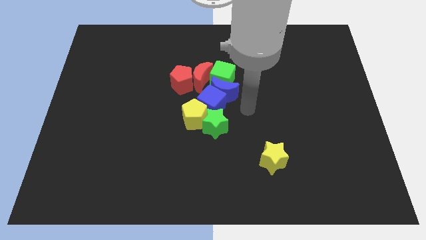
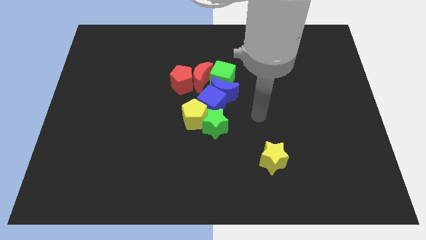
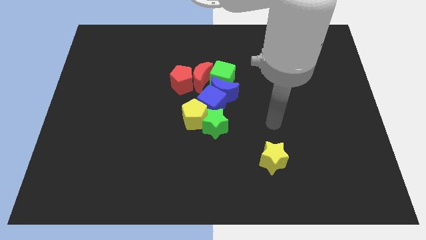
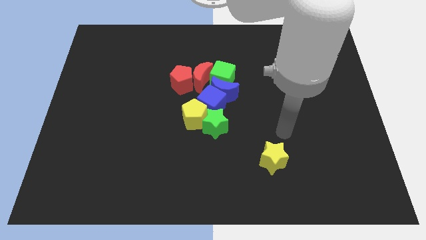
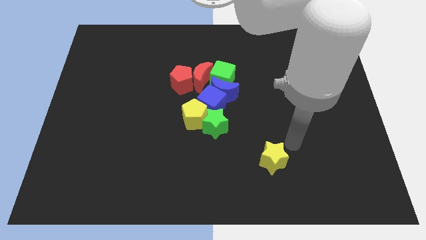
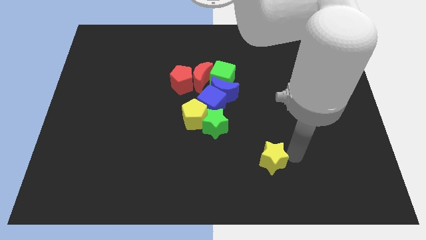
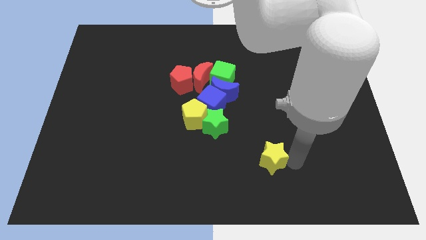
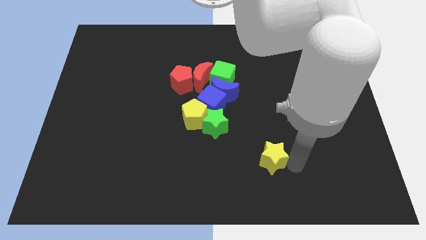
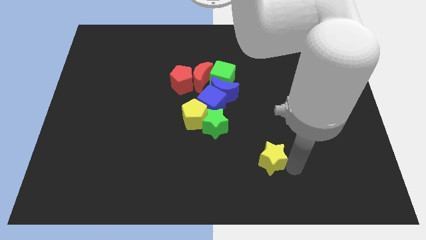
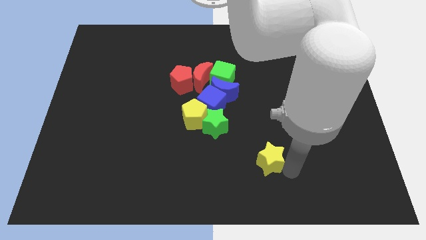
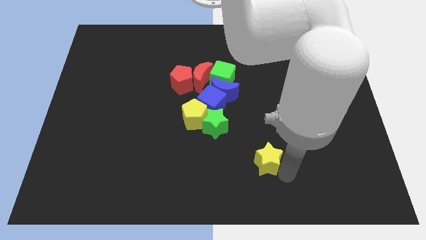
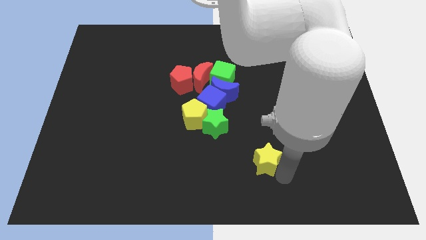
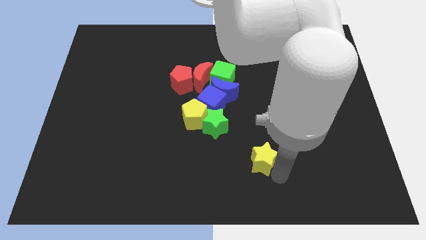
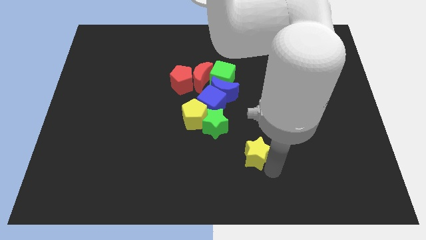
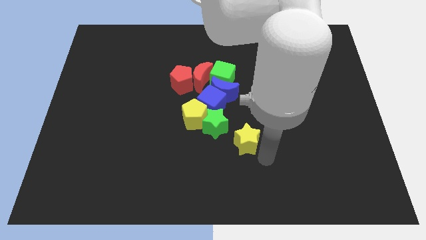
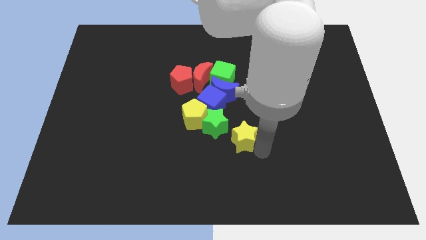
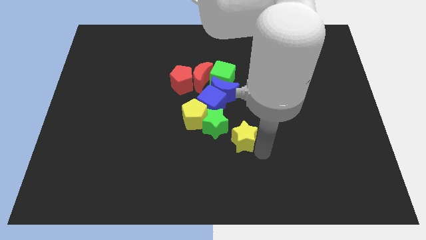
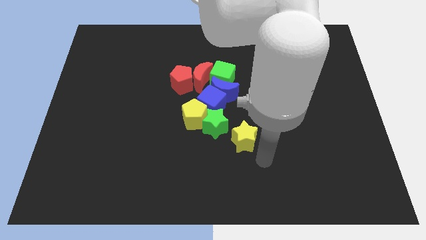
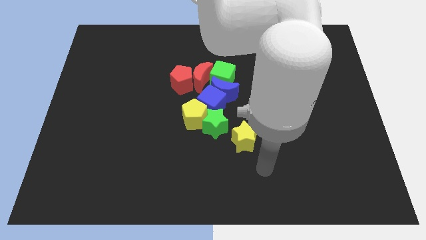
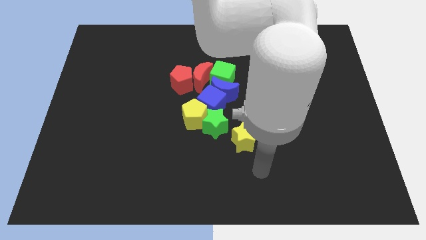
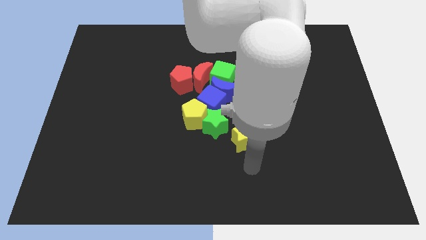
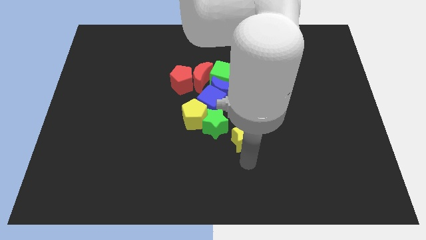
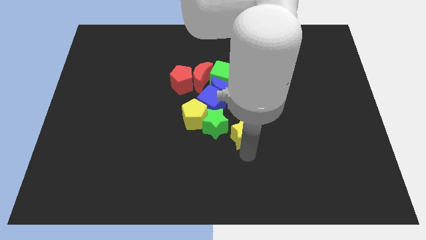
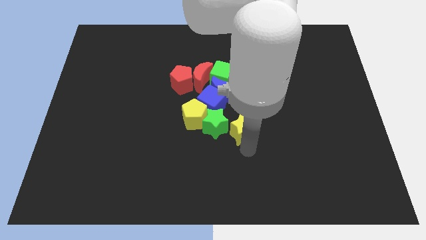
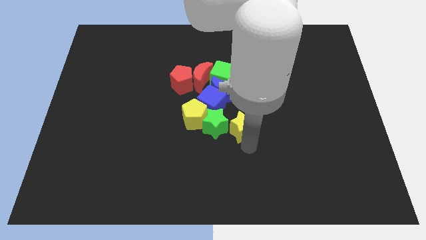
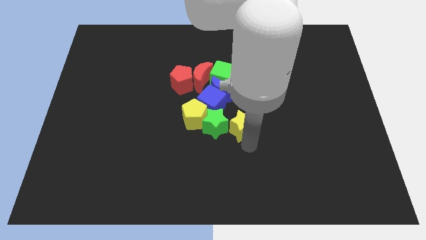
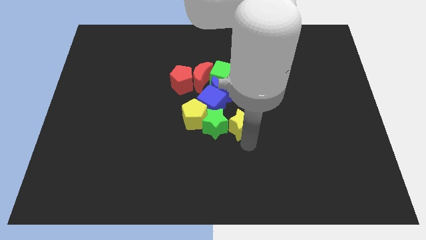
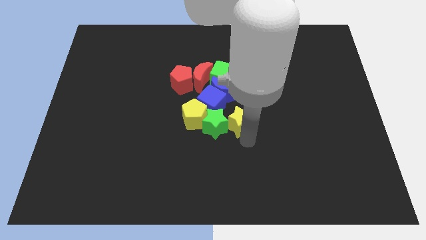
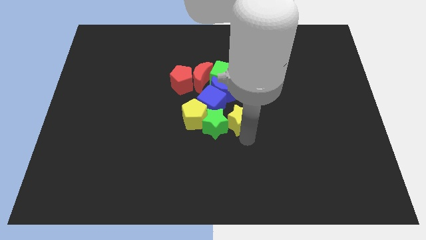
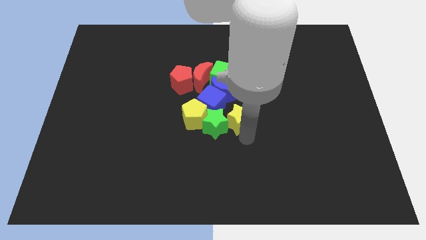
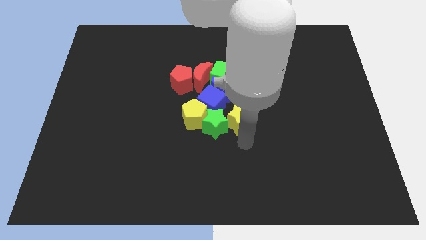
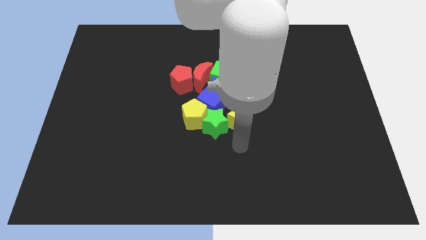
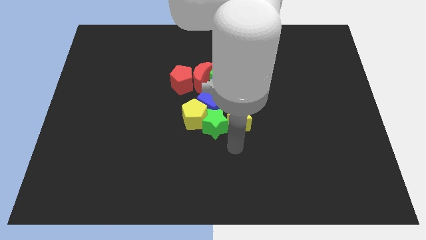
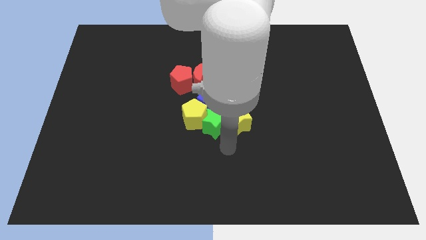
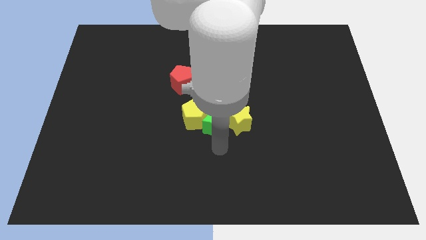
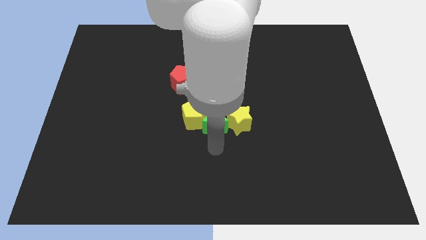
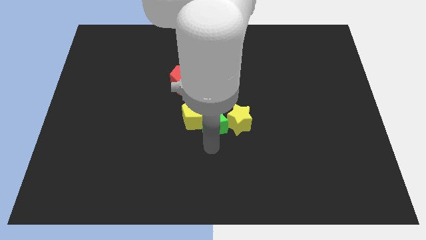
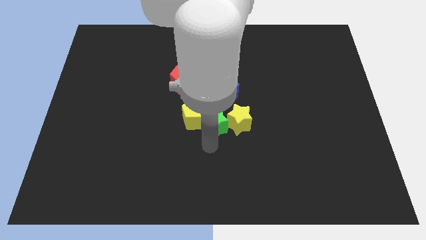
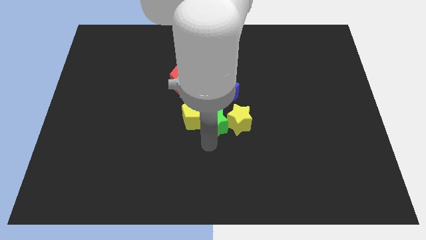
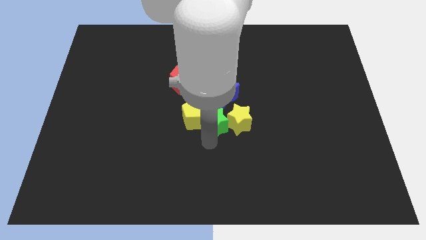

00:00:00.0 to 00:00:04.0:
push yellow star to center of the board

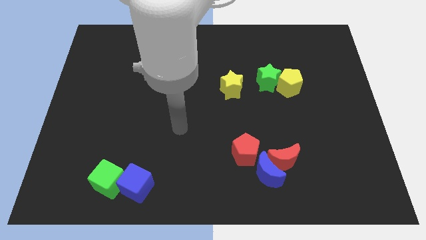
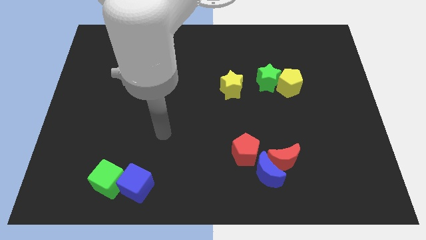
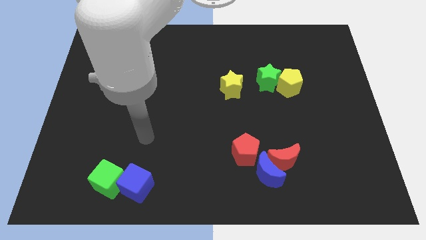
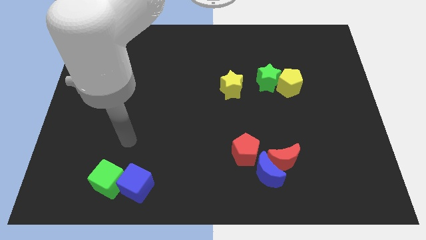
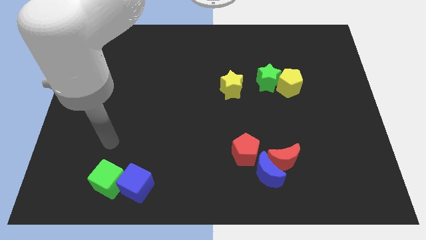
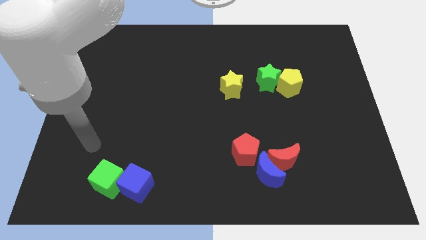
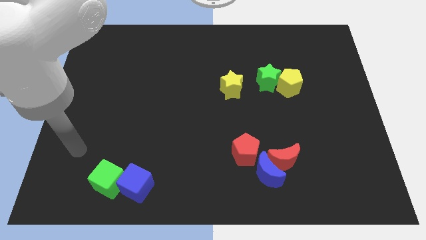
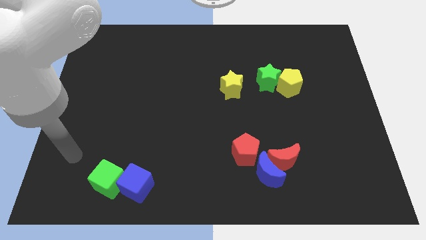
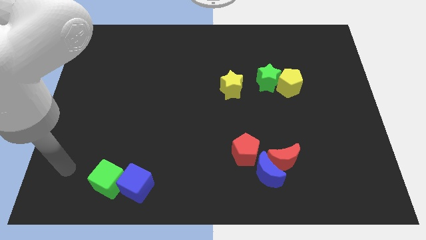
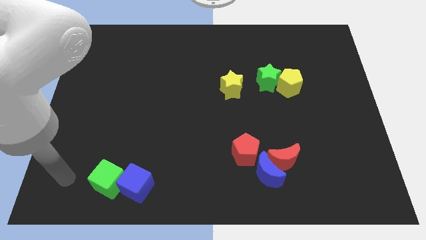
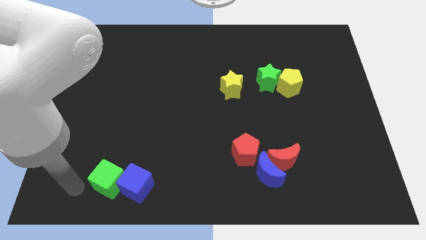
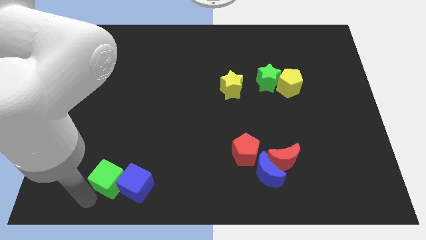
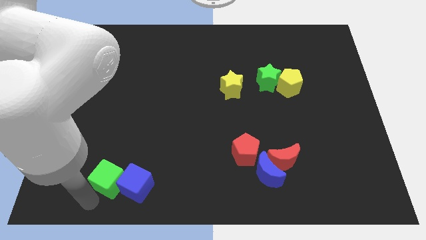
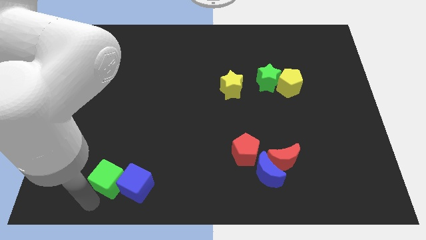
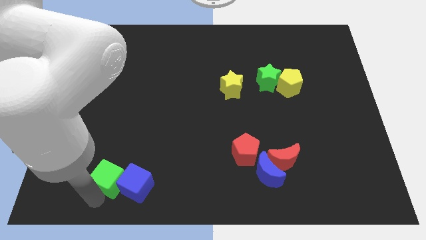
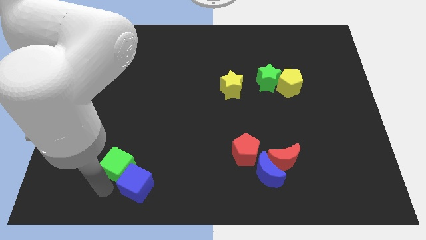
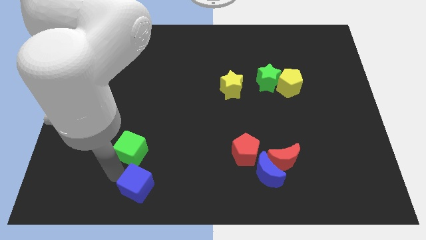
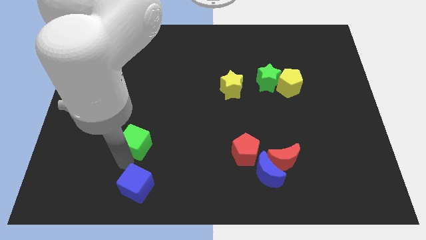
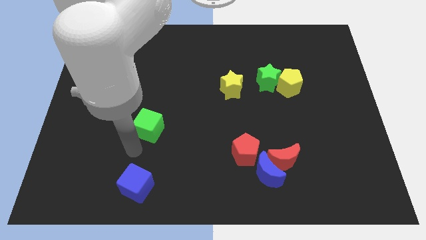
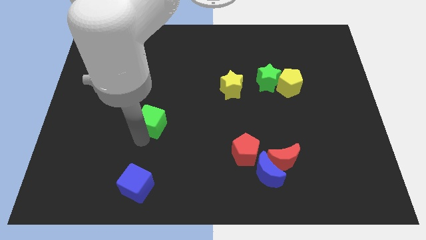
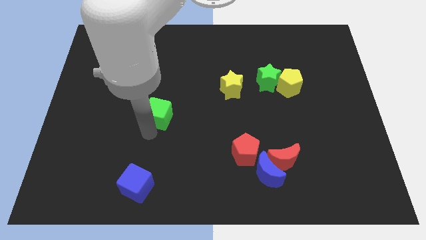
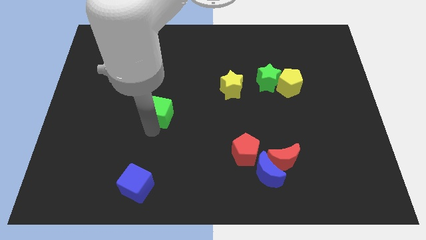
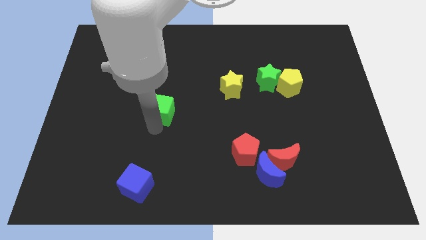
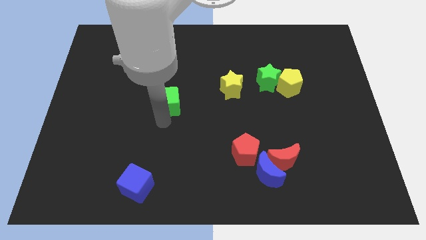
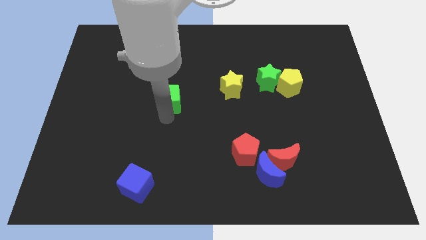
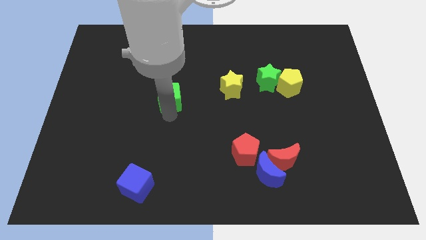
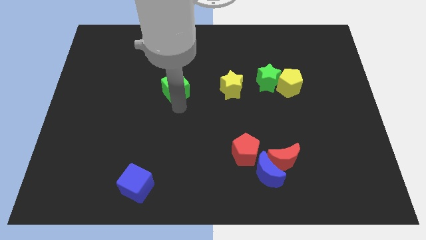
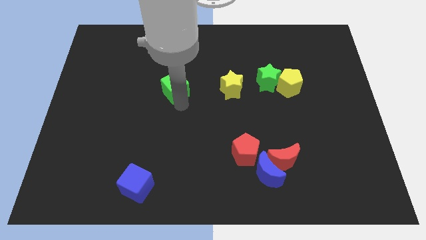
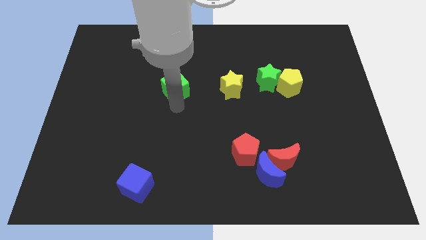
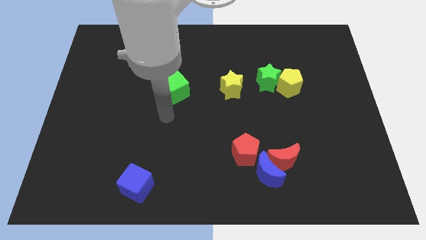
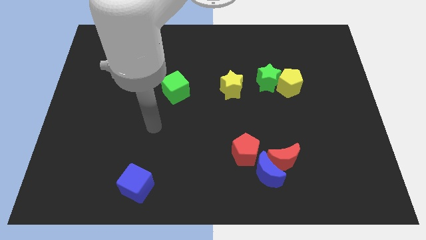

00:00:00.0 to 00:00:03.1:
separate green cube from the blue cube

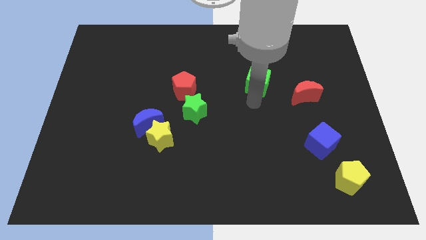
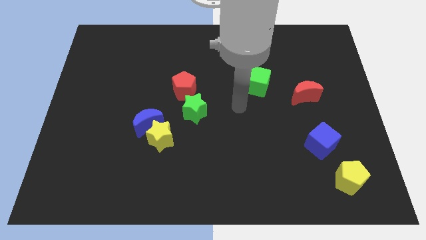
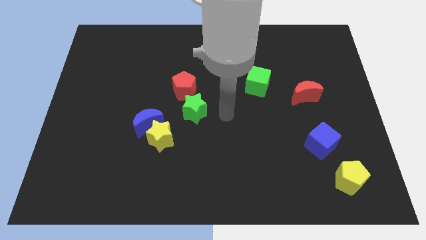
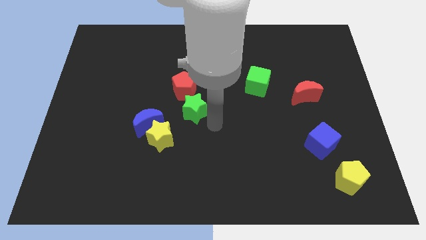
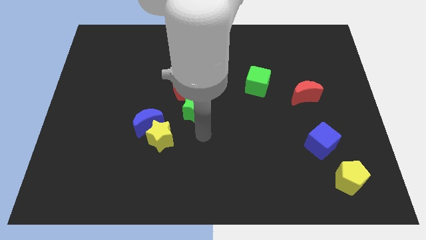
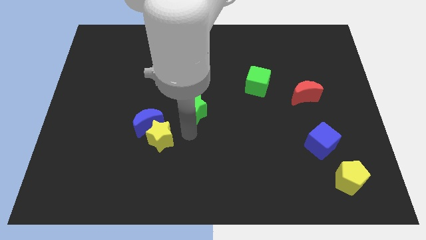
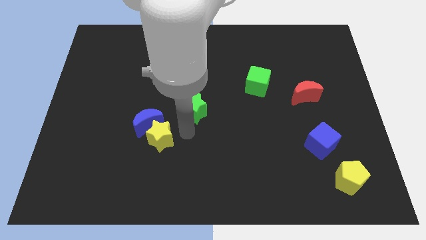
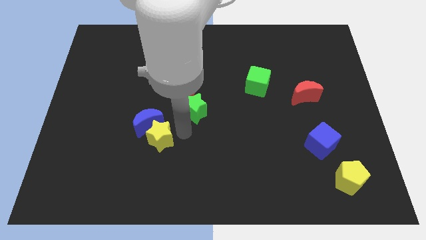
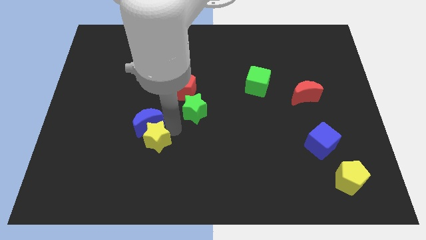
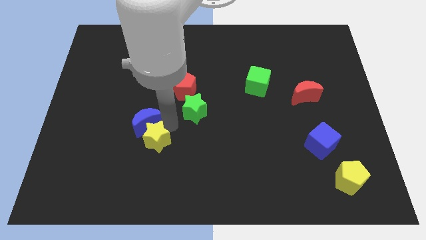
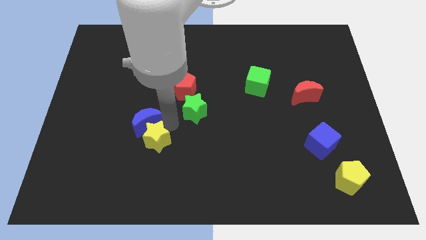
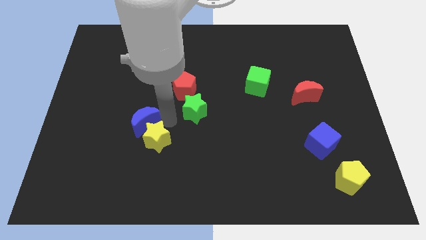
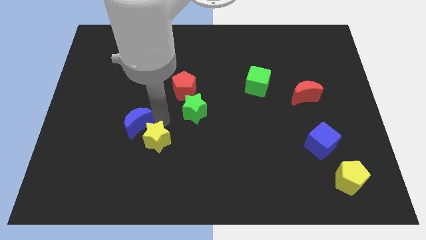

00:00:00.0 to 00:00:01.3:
slightly push the yellow star and blue moon towards the left of the board

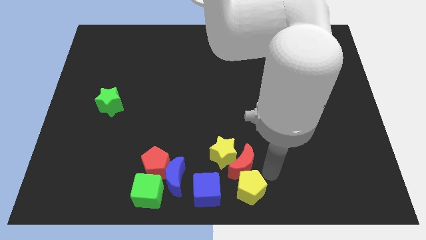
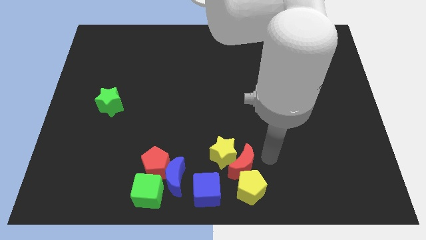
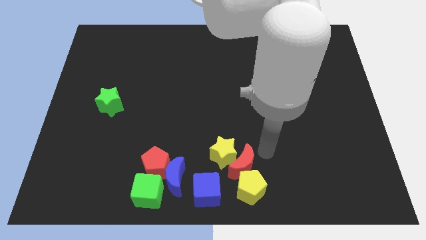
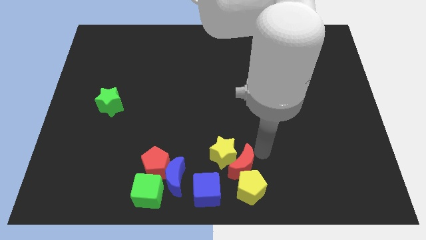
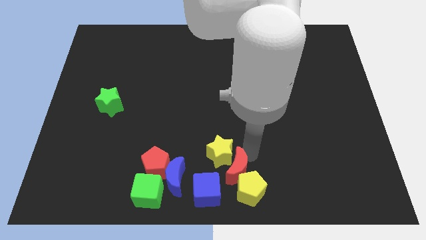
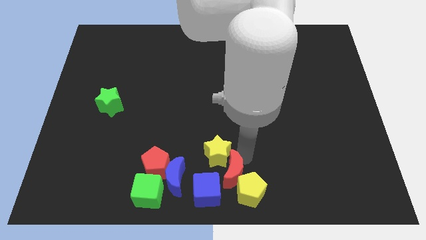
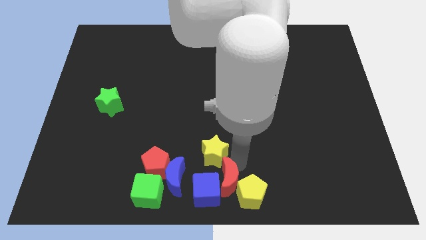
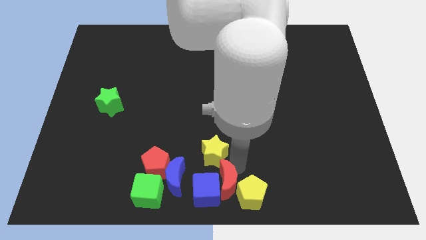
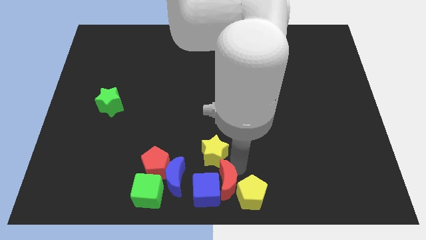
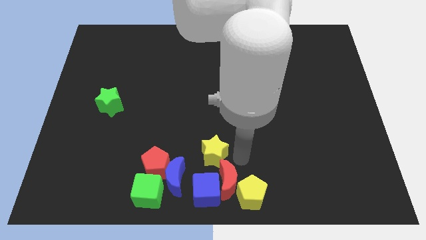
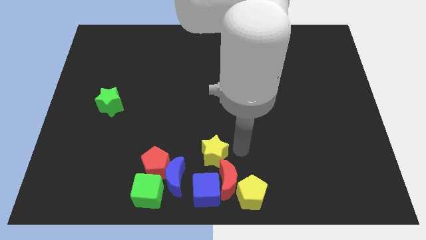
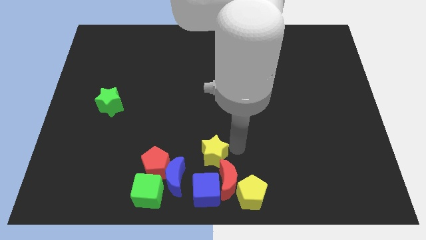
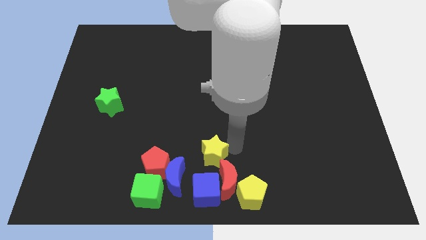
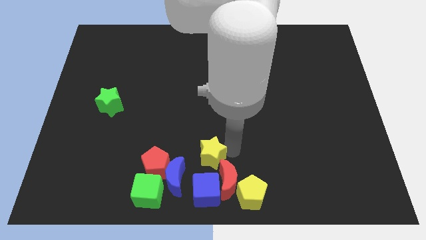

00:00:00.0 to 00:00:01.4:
push red crescent into blue cube
